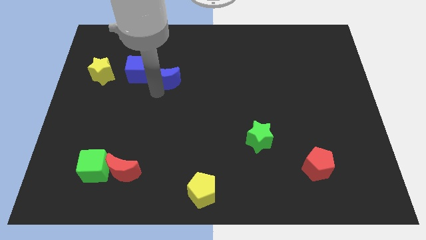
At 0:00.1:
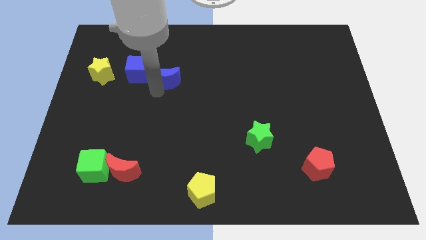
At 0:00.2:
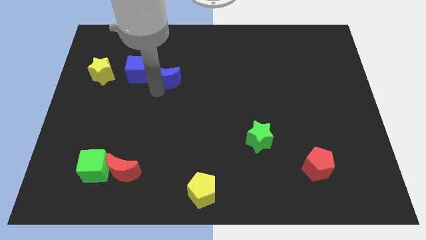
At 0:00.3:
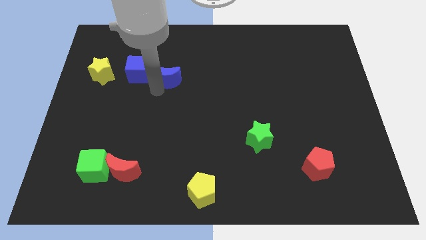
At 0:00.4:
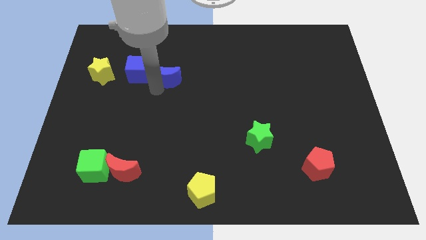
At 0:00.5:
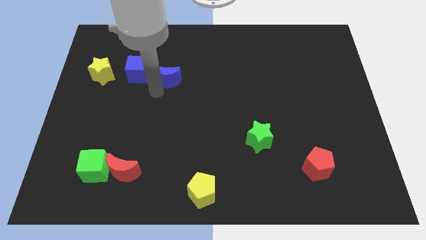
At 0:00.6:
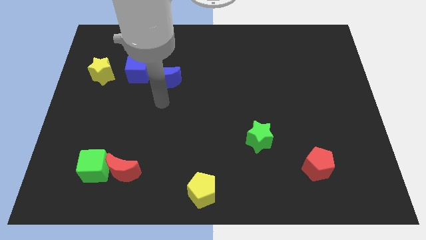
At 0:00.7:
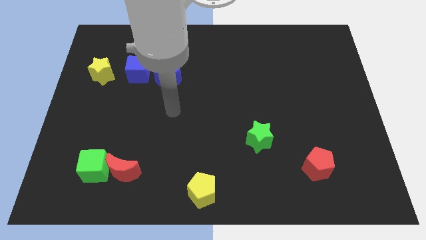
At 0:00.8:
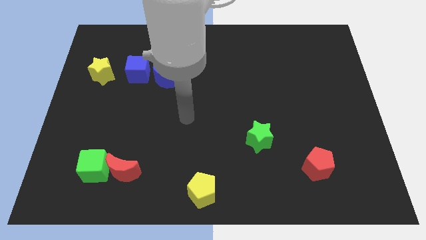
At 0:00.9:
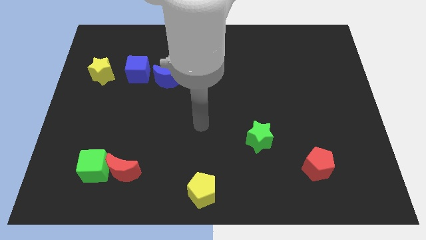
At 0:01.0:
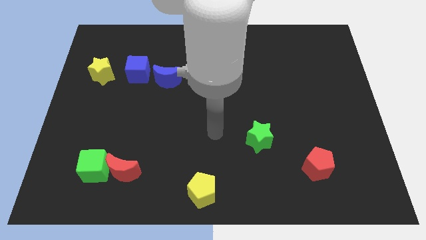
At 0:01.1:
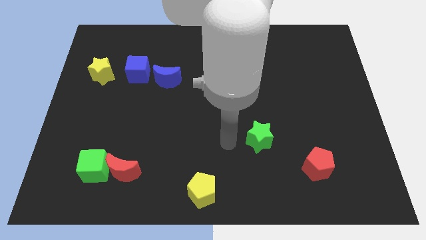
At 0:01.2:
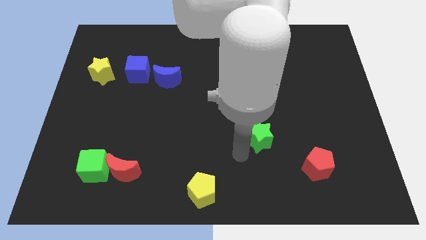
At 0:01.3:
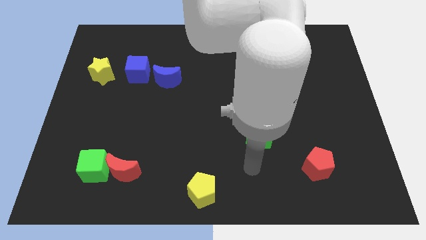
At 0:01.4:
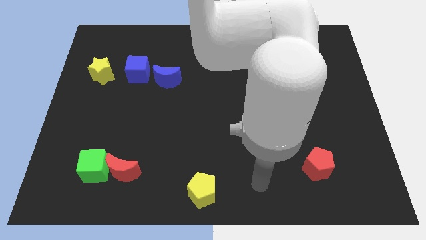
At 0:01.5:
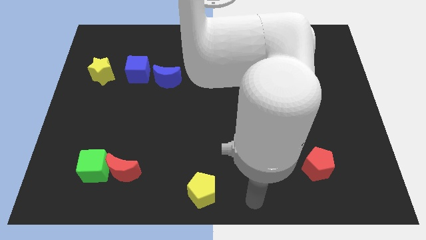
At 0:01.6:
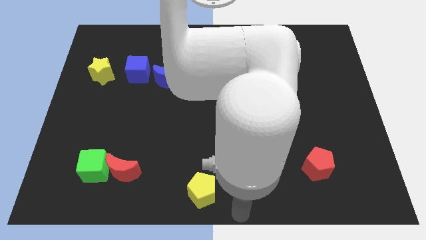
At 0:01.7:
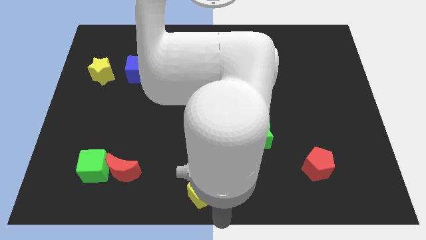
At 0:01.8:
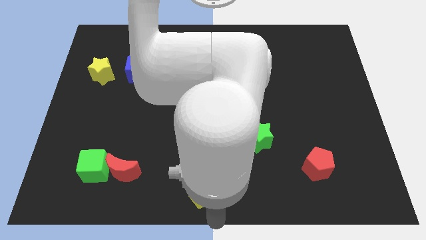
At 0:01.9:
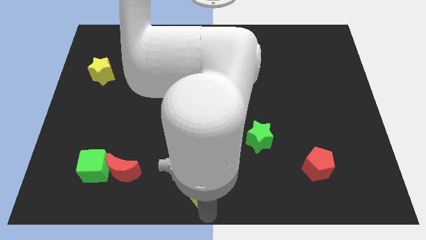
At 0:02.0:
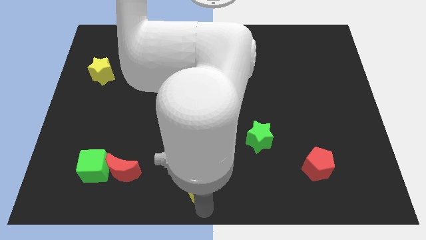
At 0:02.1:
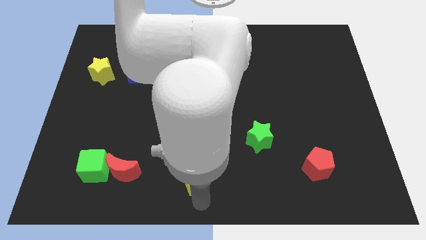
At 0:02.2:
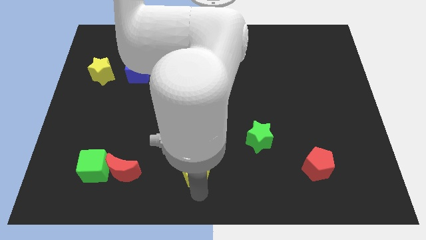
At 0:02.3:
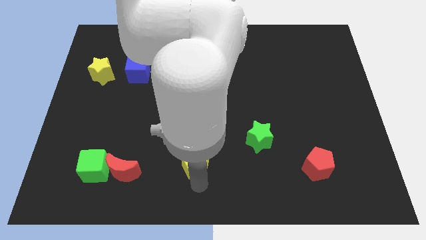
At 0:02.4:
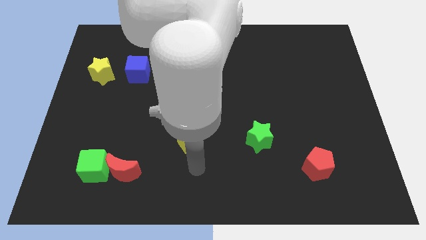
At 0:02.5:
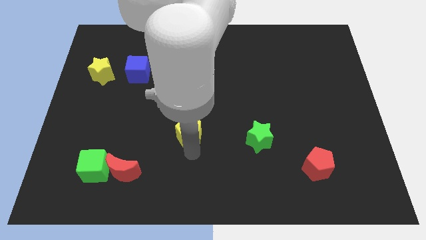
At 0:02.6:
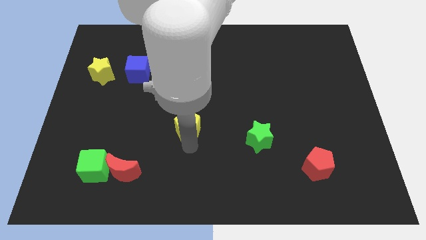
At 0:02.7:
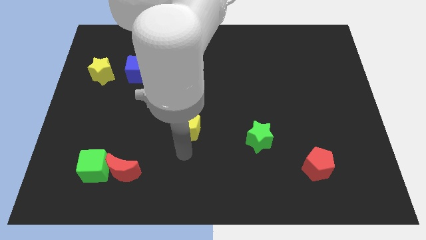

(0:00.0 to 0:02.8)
move the arm towards the yellow pentagon

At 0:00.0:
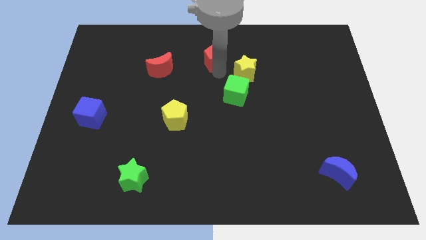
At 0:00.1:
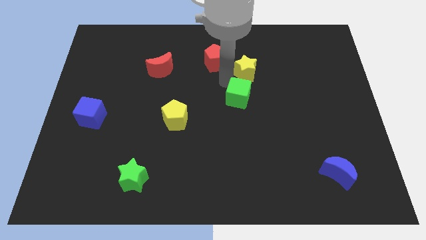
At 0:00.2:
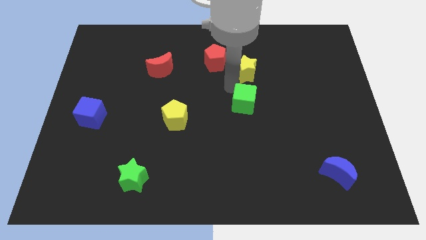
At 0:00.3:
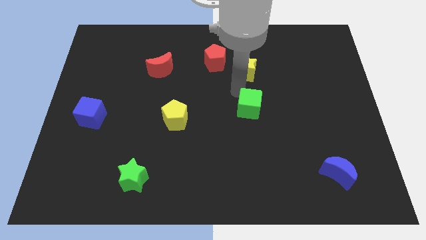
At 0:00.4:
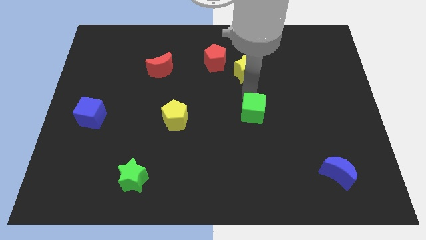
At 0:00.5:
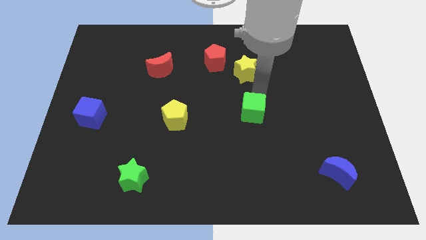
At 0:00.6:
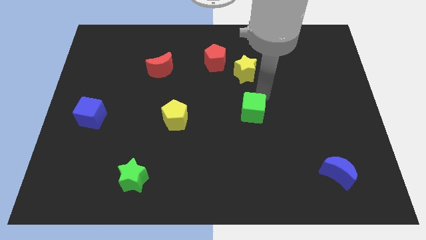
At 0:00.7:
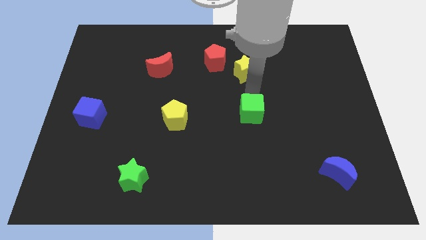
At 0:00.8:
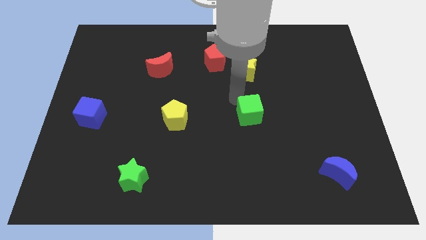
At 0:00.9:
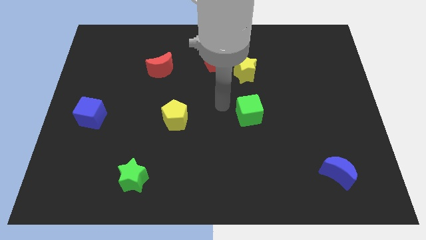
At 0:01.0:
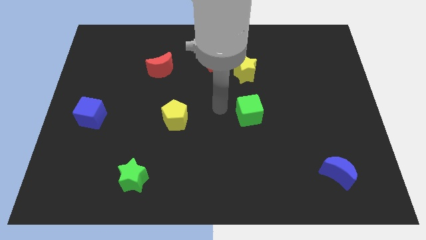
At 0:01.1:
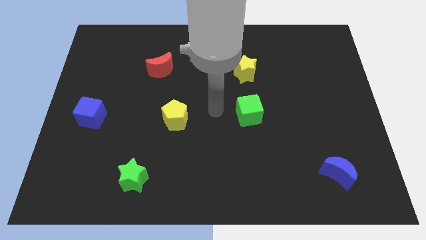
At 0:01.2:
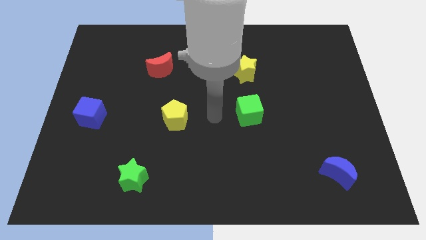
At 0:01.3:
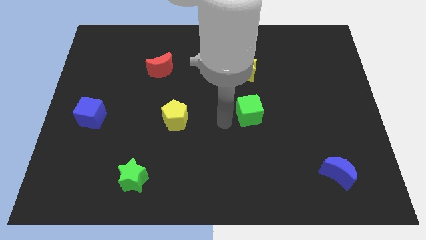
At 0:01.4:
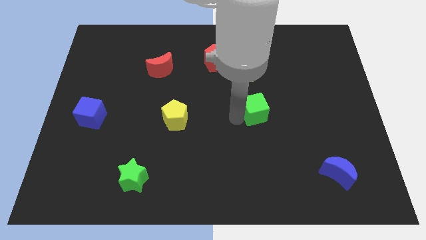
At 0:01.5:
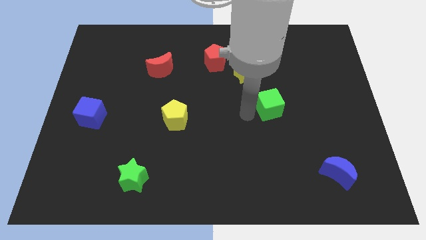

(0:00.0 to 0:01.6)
push the green cube to the bottom right of the yellow star

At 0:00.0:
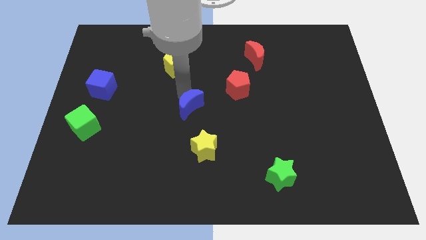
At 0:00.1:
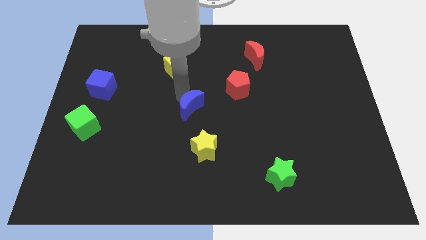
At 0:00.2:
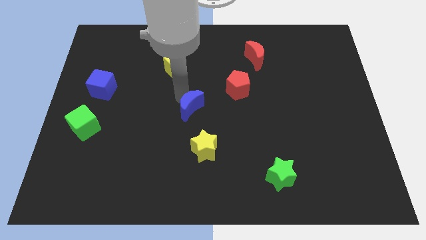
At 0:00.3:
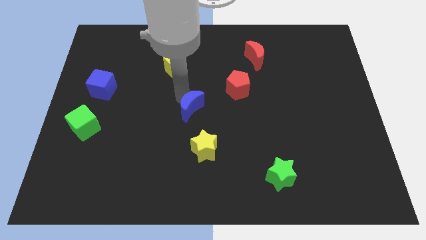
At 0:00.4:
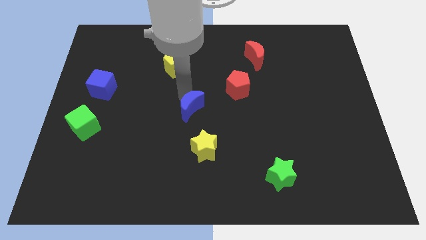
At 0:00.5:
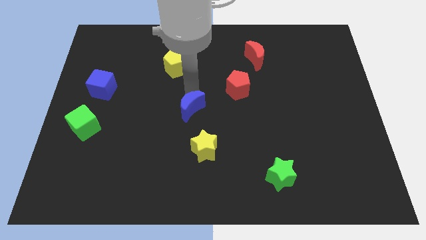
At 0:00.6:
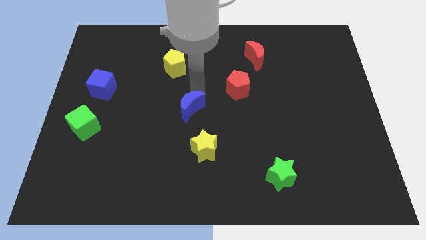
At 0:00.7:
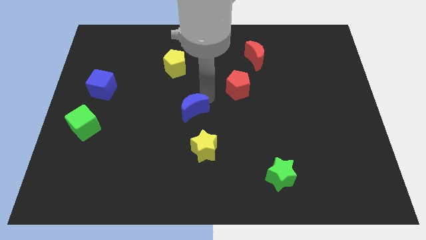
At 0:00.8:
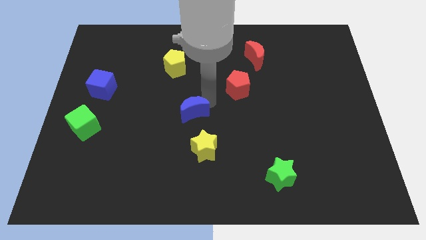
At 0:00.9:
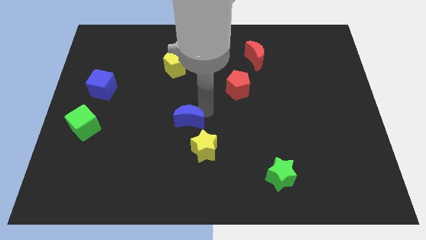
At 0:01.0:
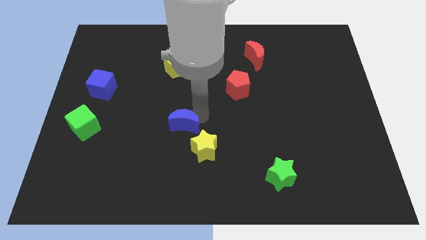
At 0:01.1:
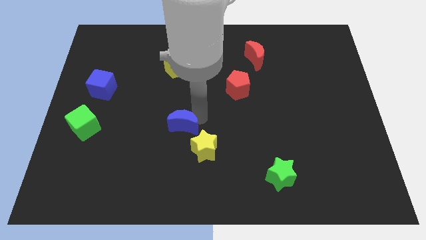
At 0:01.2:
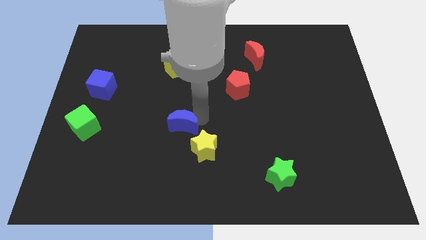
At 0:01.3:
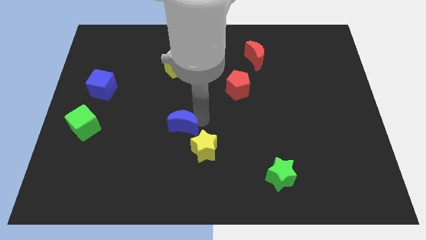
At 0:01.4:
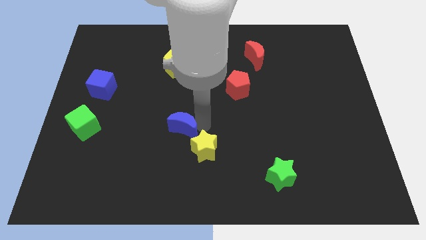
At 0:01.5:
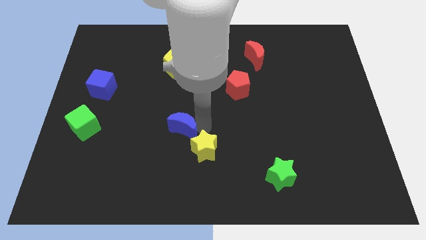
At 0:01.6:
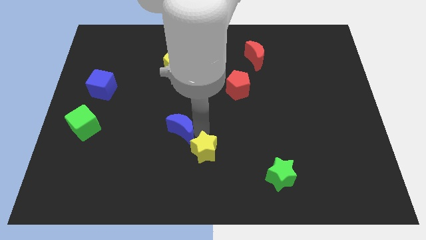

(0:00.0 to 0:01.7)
move the blue crescent close to the yellow star

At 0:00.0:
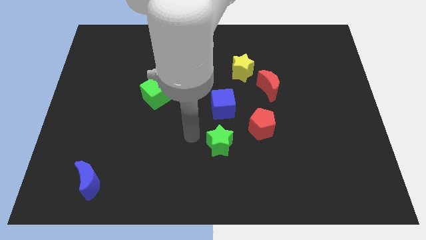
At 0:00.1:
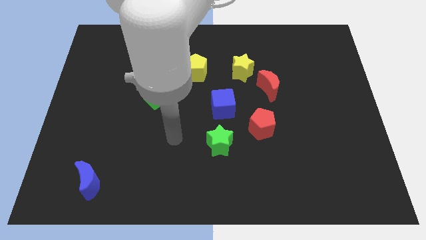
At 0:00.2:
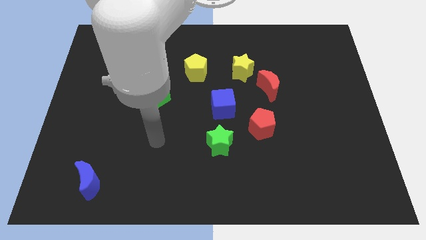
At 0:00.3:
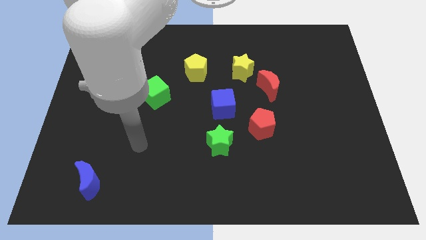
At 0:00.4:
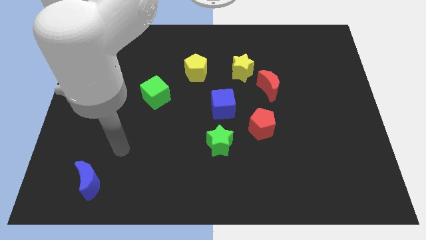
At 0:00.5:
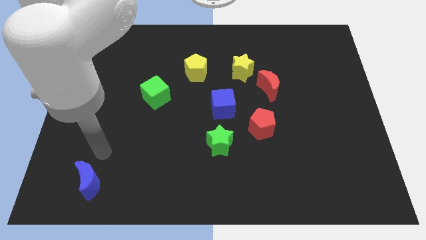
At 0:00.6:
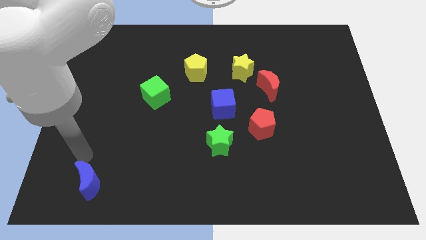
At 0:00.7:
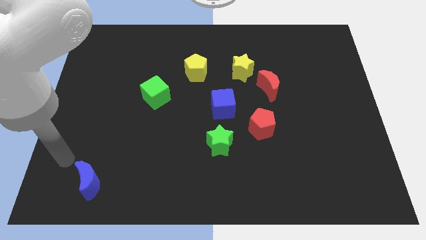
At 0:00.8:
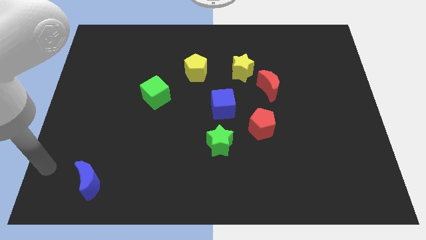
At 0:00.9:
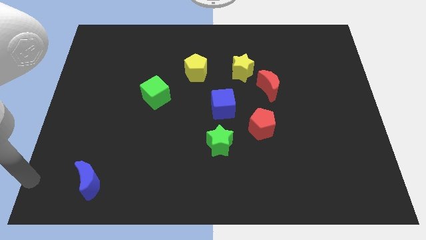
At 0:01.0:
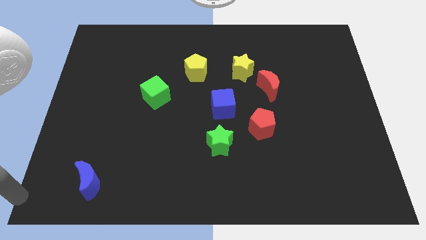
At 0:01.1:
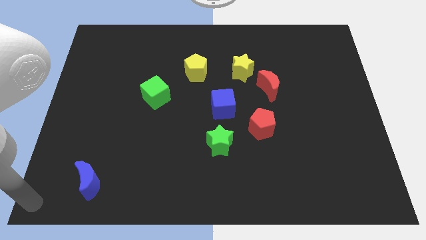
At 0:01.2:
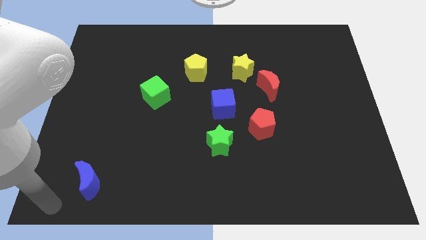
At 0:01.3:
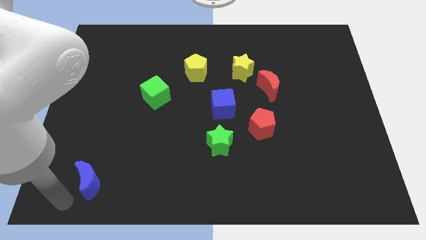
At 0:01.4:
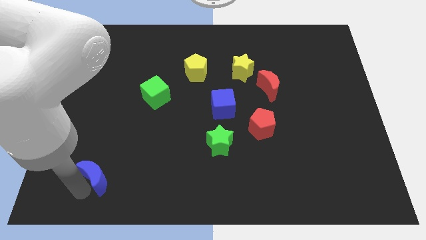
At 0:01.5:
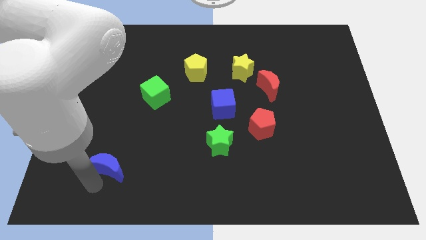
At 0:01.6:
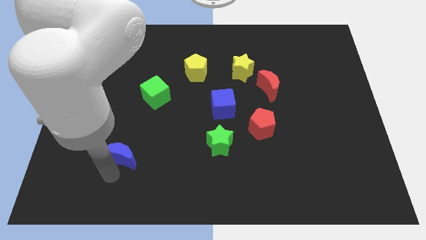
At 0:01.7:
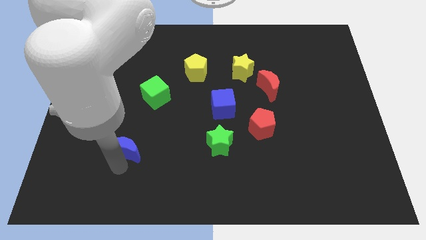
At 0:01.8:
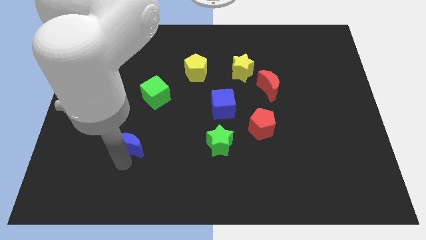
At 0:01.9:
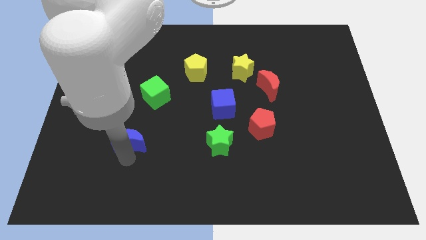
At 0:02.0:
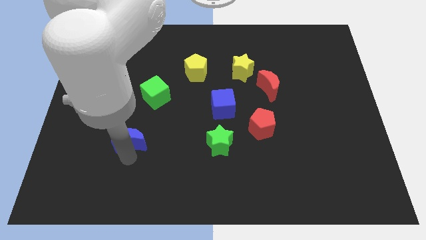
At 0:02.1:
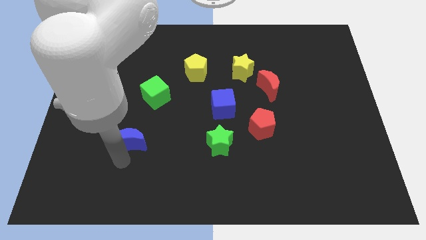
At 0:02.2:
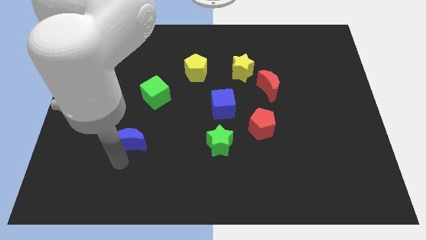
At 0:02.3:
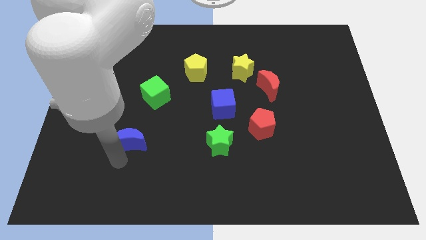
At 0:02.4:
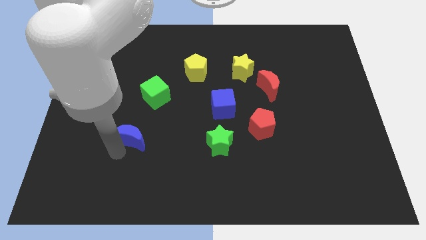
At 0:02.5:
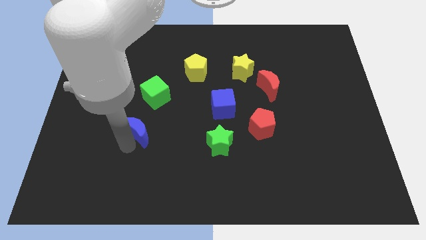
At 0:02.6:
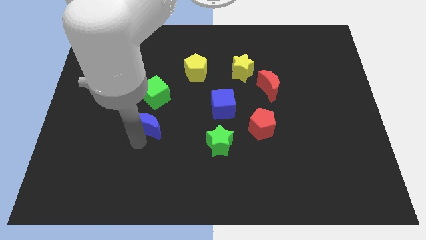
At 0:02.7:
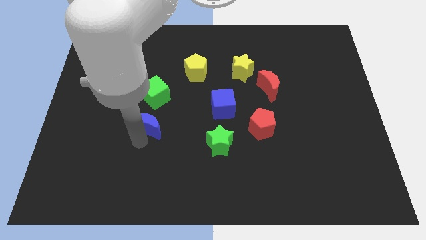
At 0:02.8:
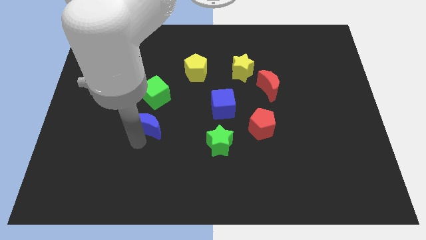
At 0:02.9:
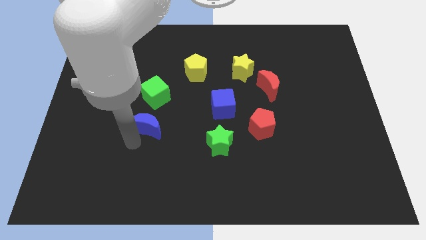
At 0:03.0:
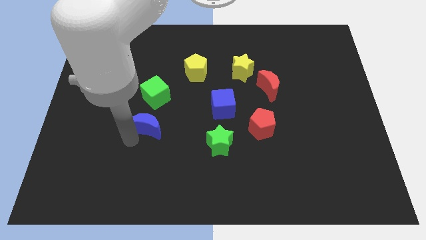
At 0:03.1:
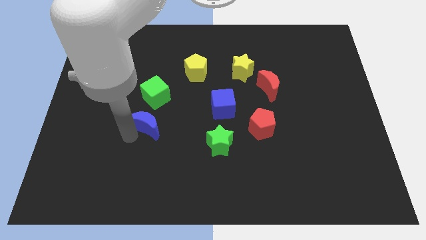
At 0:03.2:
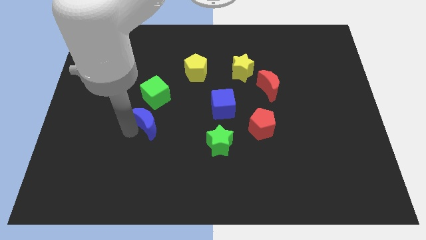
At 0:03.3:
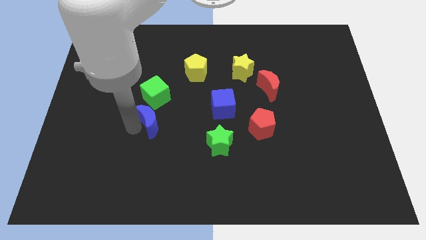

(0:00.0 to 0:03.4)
push the blue crescent to the bottom of the green cube
